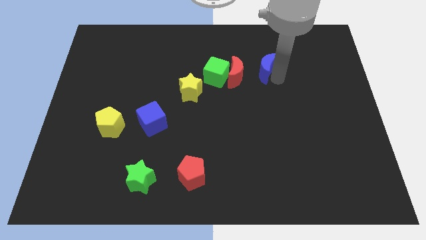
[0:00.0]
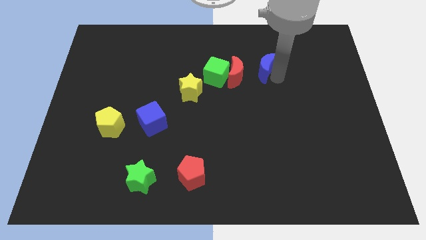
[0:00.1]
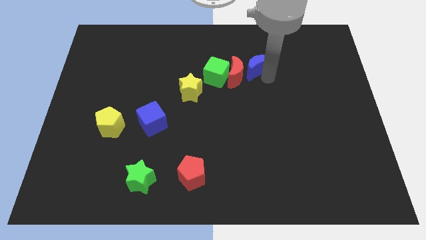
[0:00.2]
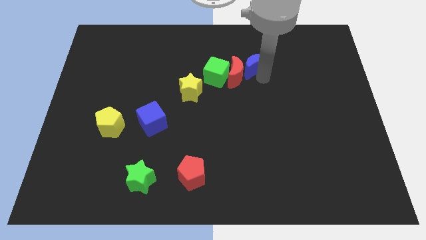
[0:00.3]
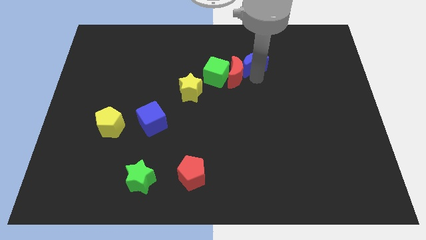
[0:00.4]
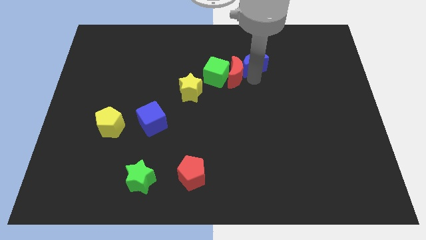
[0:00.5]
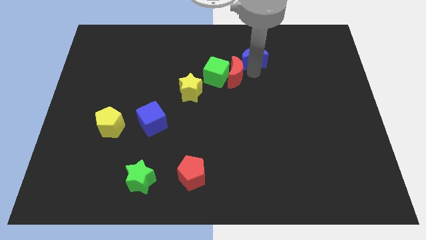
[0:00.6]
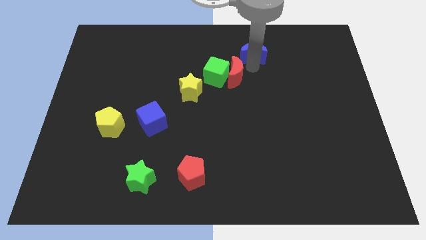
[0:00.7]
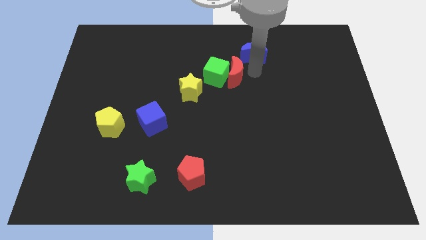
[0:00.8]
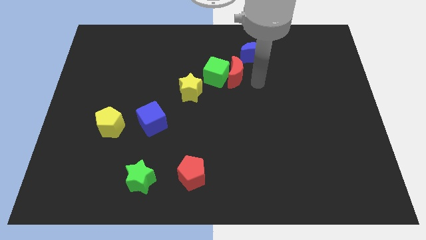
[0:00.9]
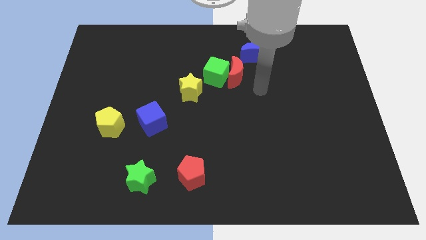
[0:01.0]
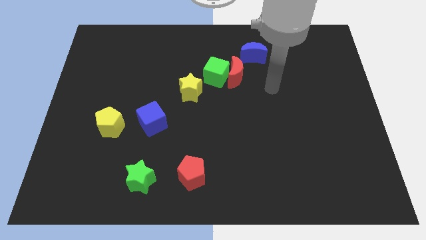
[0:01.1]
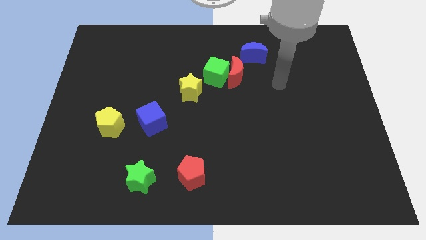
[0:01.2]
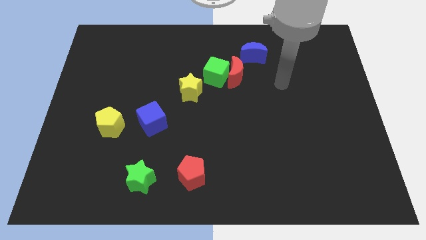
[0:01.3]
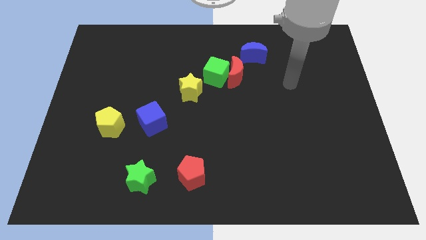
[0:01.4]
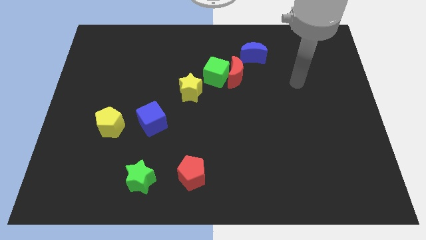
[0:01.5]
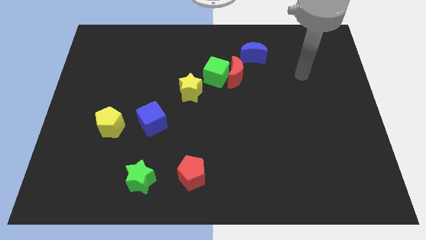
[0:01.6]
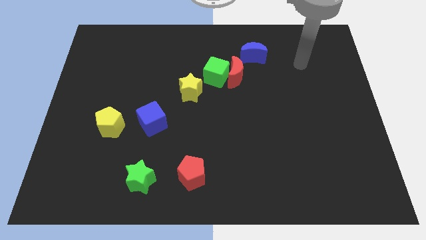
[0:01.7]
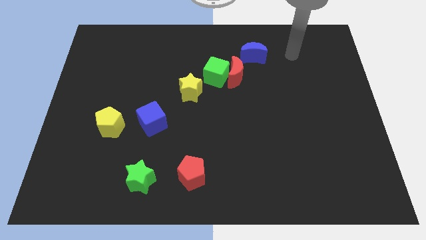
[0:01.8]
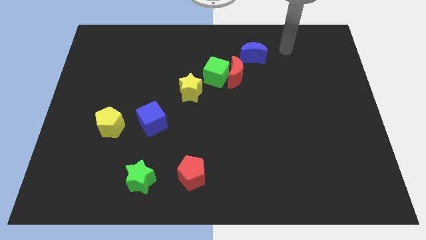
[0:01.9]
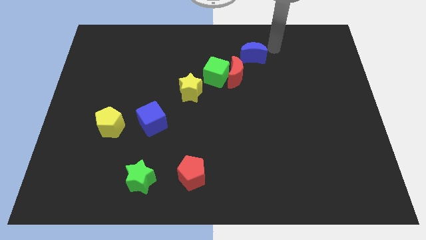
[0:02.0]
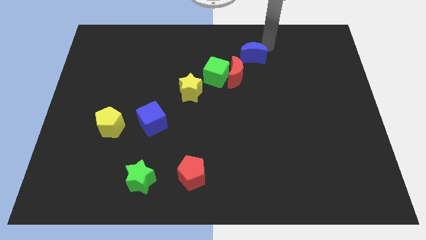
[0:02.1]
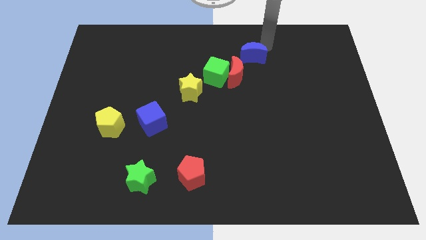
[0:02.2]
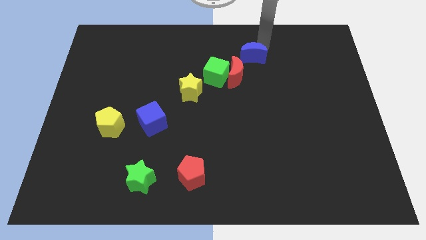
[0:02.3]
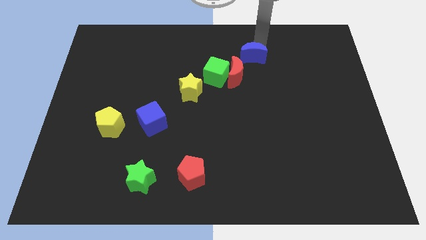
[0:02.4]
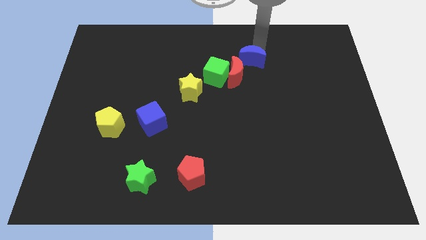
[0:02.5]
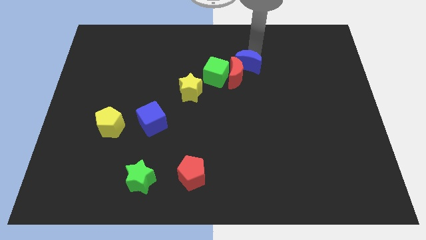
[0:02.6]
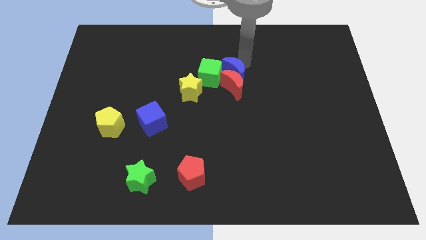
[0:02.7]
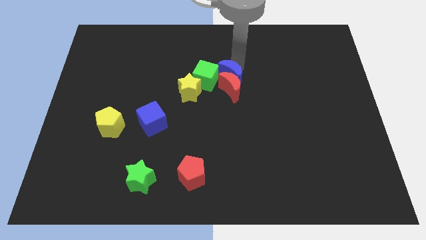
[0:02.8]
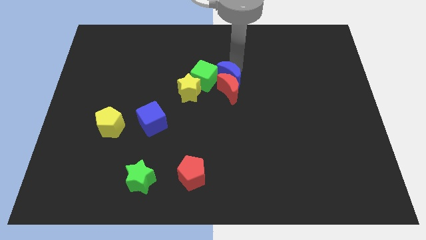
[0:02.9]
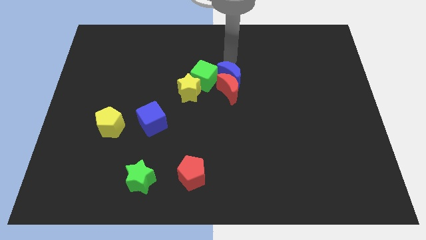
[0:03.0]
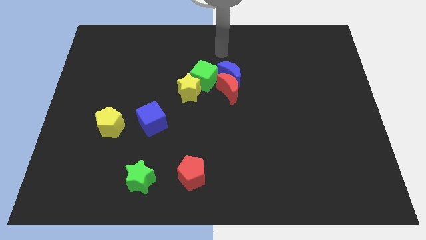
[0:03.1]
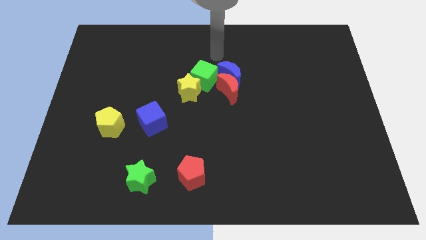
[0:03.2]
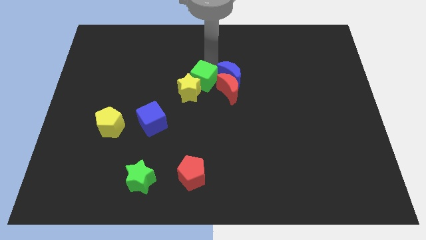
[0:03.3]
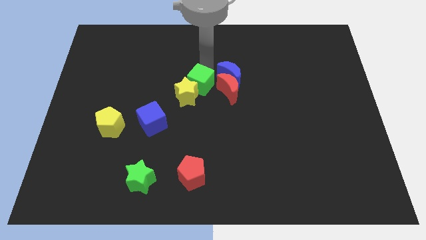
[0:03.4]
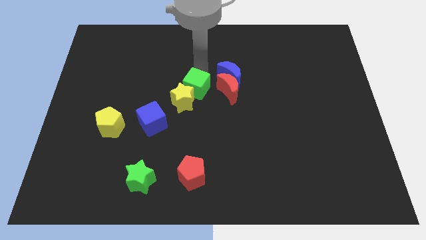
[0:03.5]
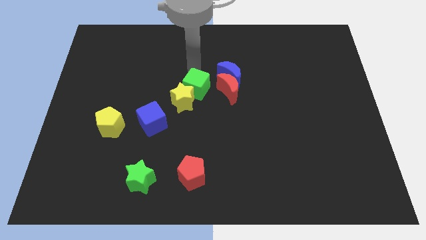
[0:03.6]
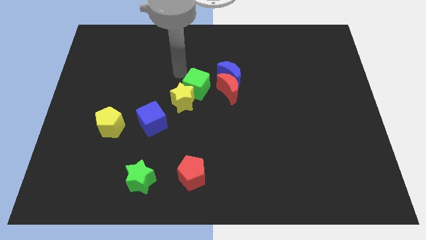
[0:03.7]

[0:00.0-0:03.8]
push blue moon in to red moon

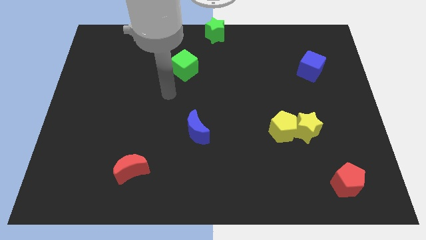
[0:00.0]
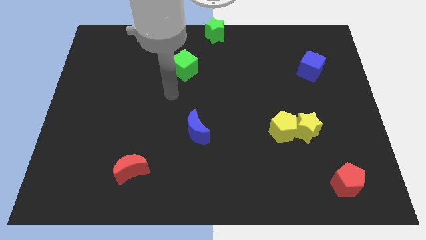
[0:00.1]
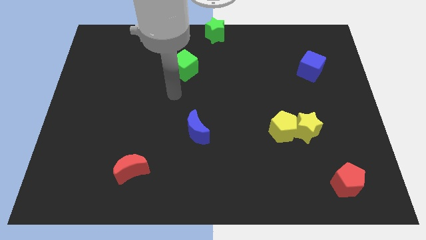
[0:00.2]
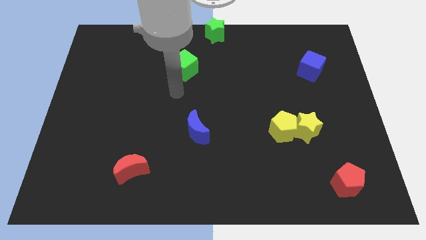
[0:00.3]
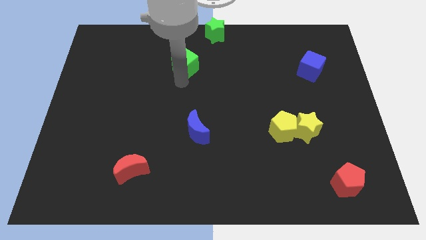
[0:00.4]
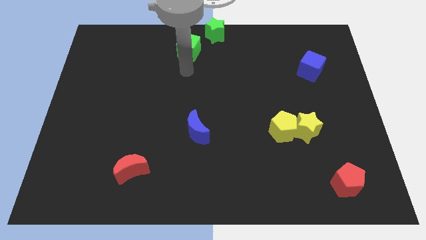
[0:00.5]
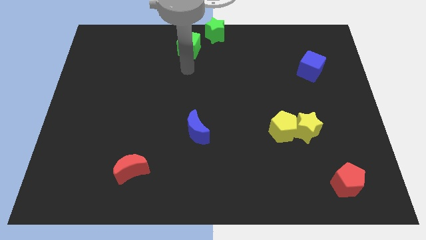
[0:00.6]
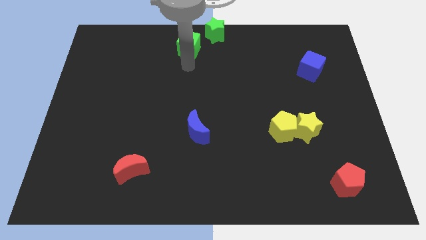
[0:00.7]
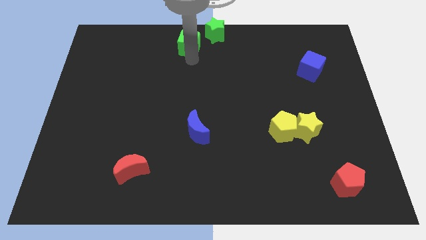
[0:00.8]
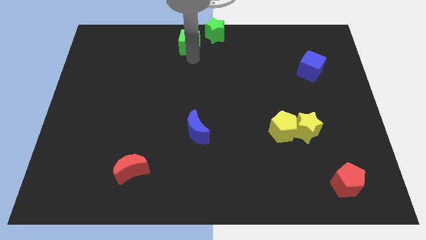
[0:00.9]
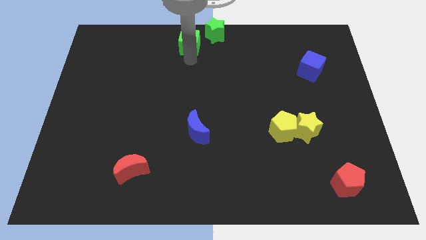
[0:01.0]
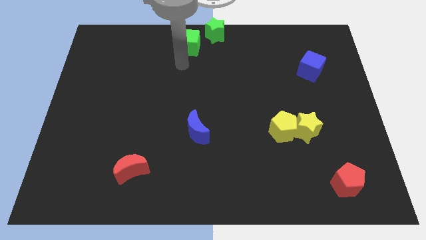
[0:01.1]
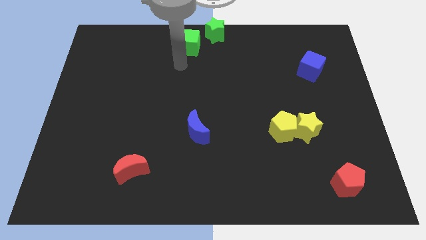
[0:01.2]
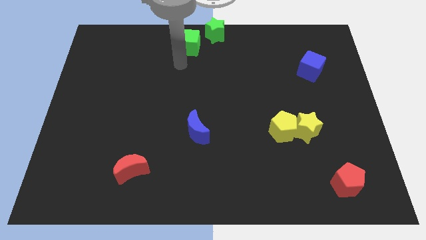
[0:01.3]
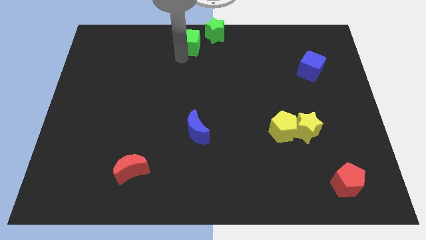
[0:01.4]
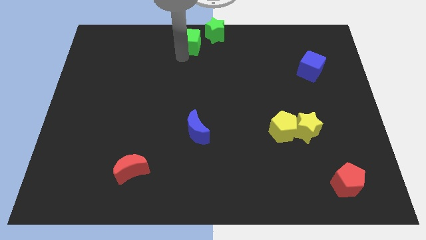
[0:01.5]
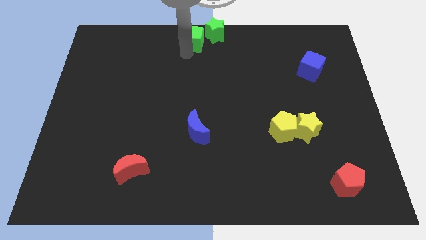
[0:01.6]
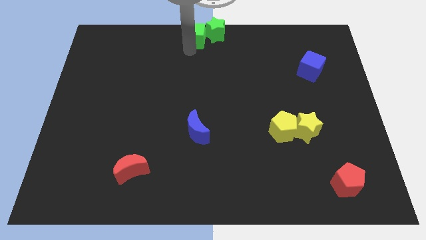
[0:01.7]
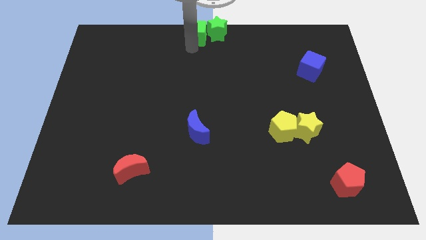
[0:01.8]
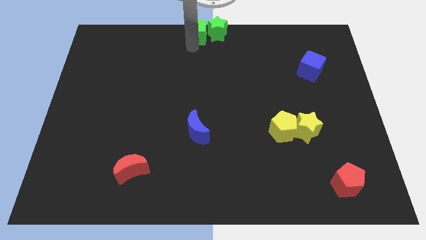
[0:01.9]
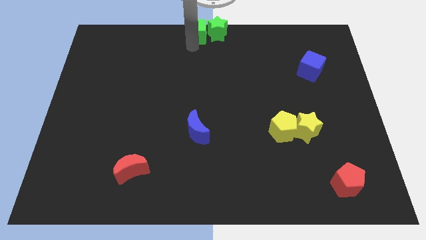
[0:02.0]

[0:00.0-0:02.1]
place green cube to the left of green star

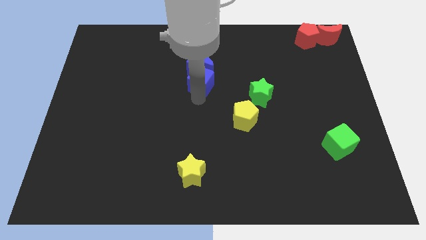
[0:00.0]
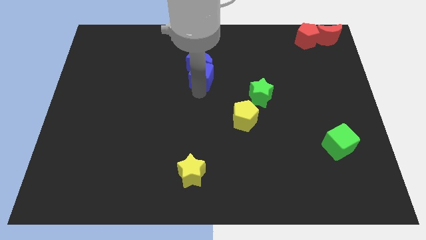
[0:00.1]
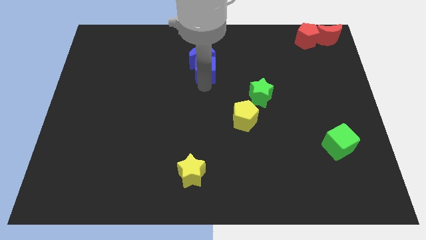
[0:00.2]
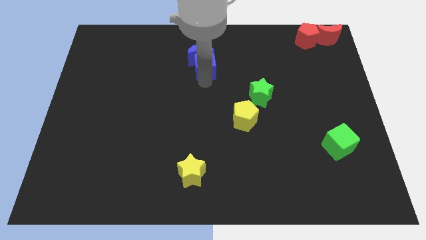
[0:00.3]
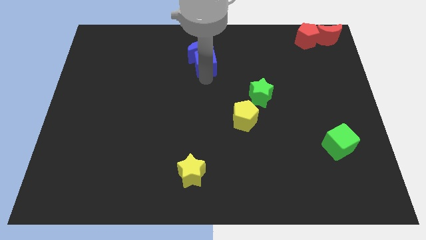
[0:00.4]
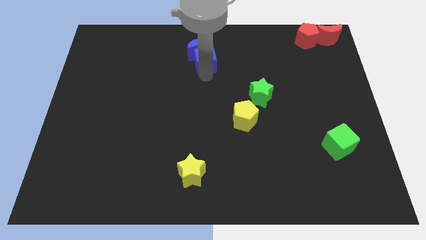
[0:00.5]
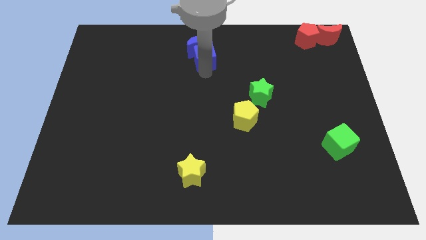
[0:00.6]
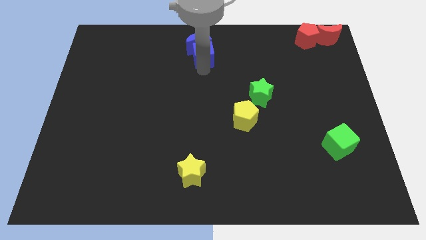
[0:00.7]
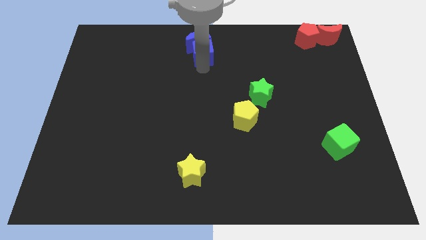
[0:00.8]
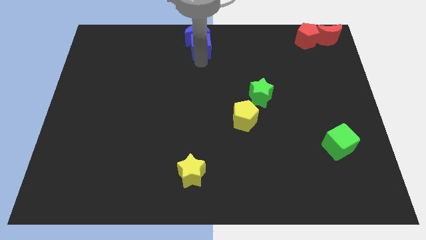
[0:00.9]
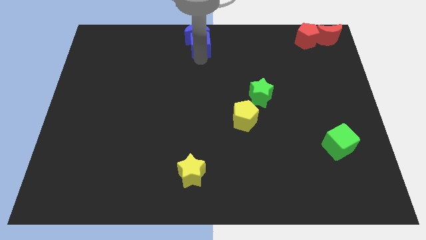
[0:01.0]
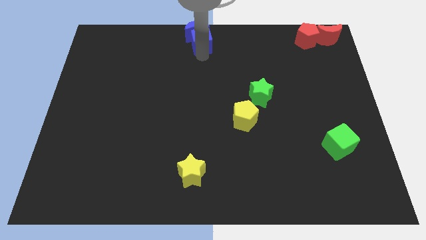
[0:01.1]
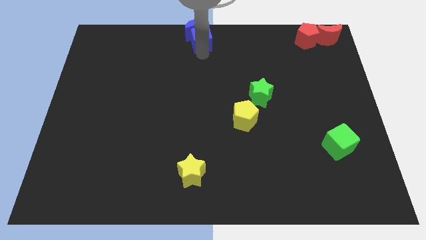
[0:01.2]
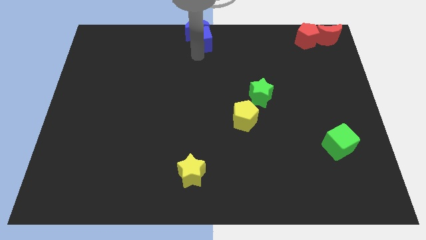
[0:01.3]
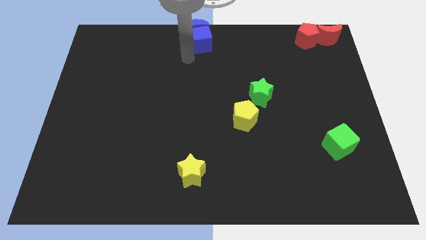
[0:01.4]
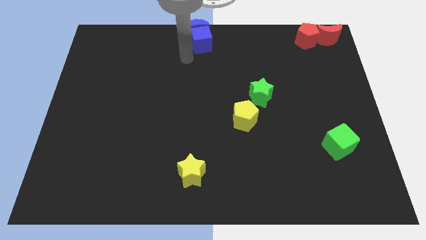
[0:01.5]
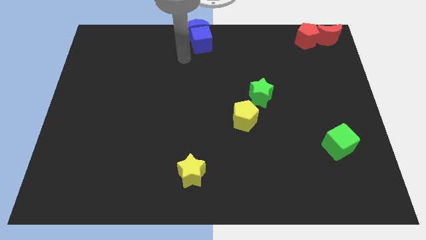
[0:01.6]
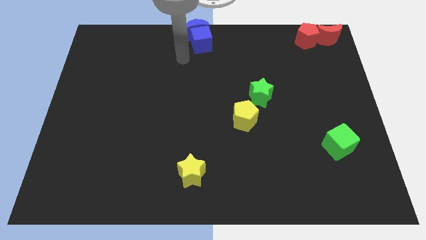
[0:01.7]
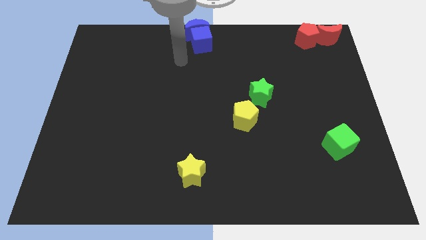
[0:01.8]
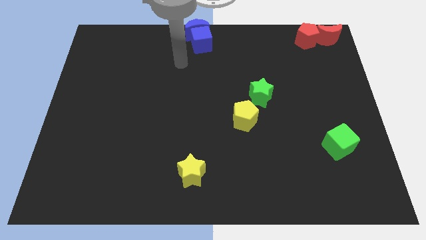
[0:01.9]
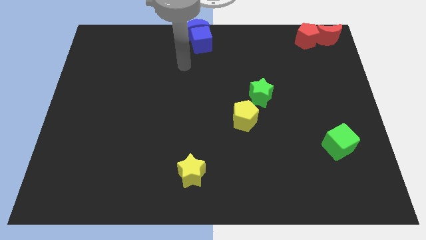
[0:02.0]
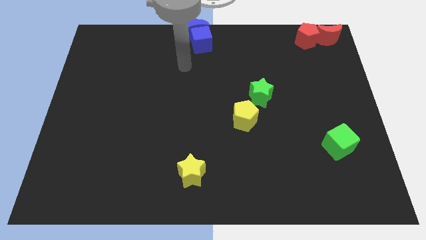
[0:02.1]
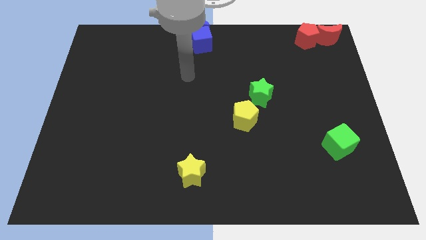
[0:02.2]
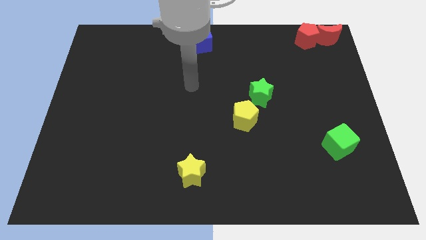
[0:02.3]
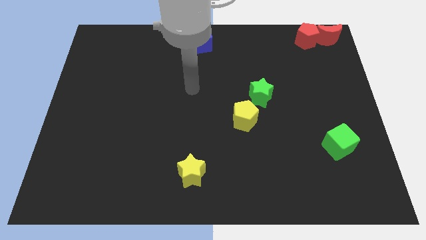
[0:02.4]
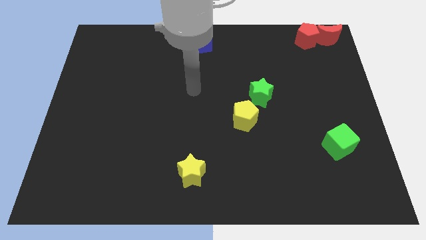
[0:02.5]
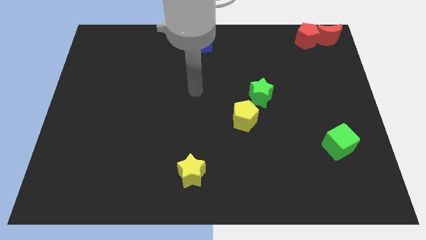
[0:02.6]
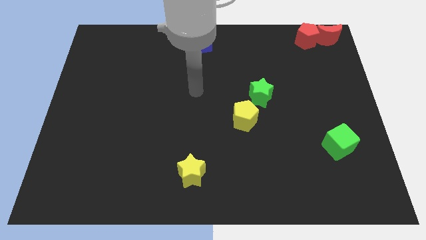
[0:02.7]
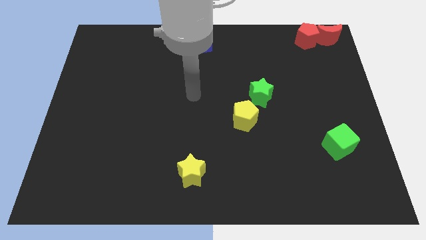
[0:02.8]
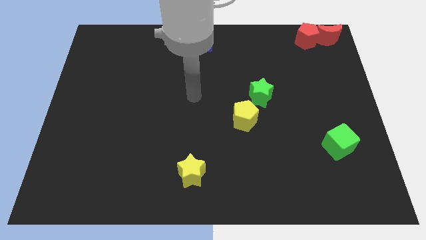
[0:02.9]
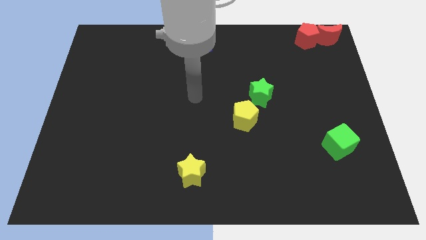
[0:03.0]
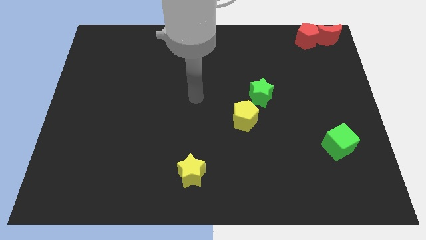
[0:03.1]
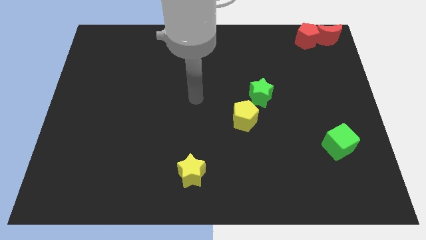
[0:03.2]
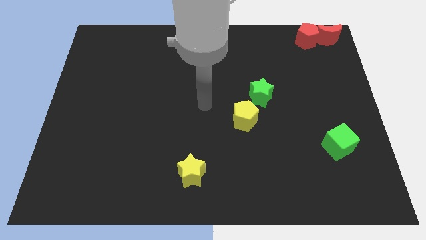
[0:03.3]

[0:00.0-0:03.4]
move blue blocks to the middle of the board
